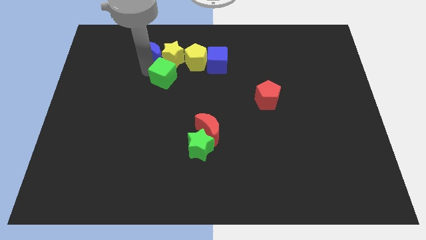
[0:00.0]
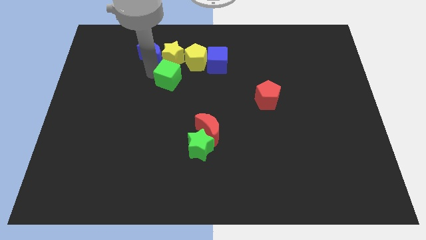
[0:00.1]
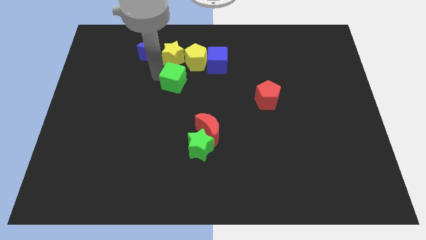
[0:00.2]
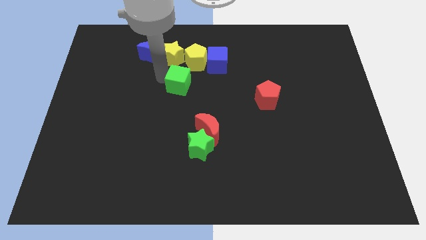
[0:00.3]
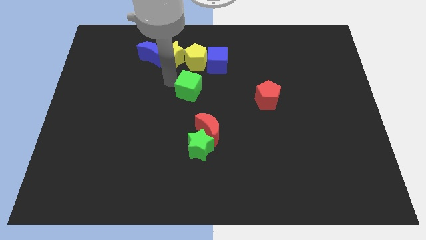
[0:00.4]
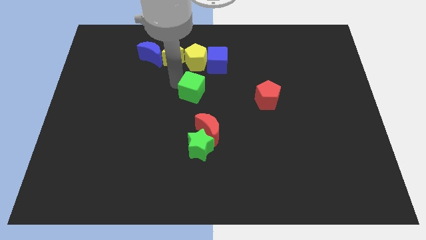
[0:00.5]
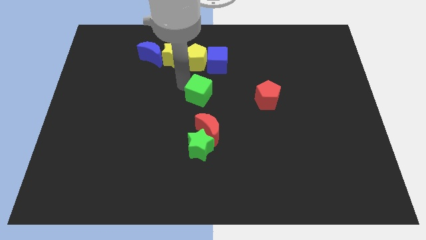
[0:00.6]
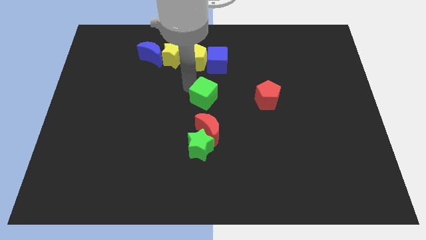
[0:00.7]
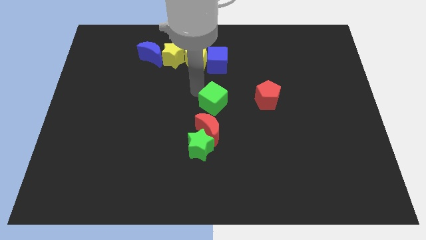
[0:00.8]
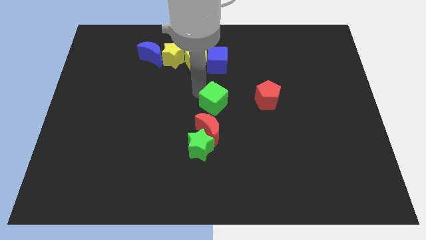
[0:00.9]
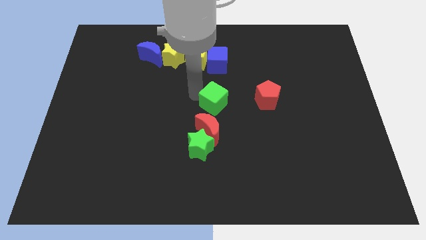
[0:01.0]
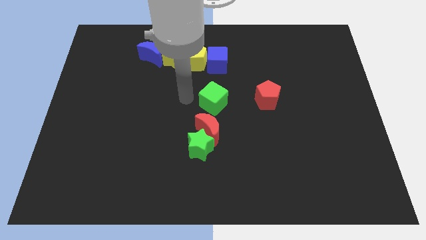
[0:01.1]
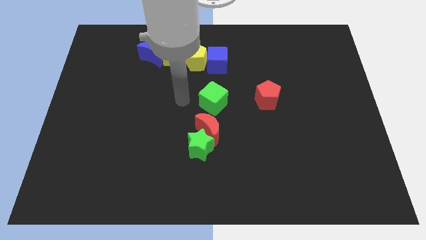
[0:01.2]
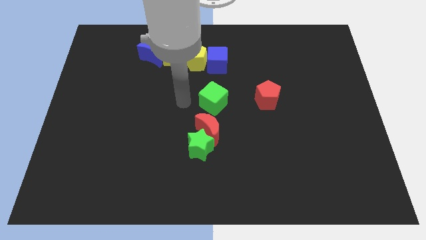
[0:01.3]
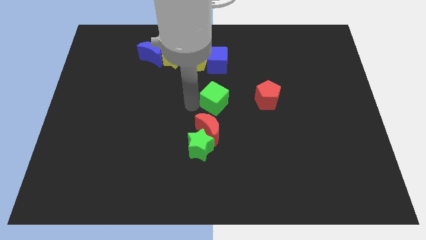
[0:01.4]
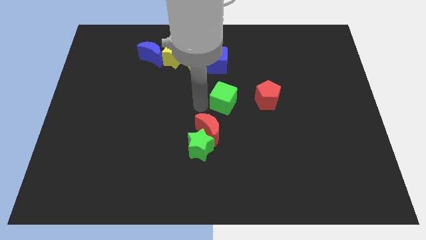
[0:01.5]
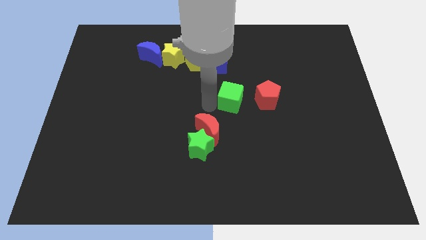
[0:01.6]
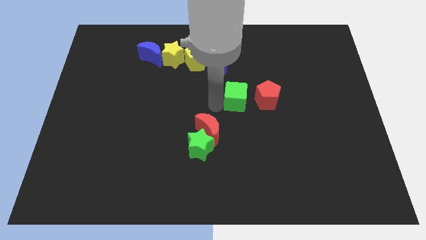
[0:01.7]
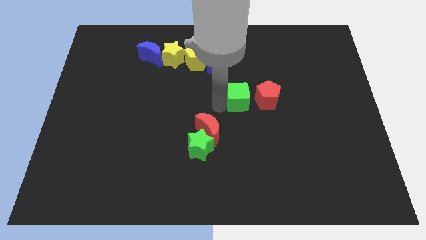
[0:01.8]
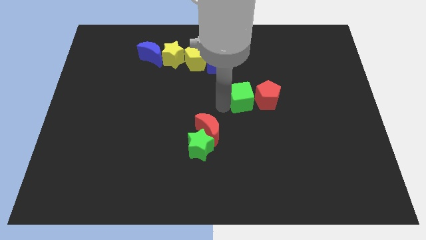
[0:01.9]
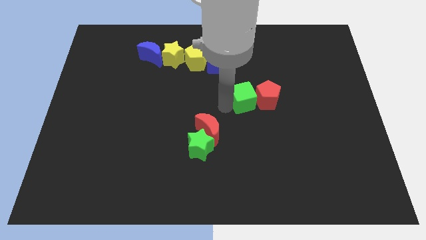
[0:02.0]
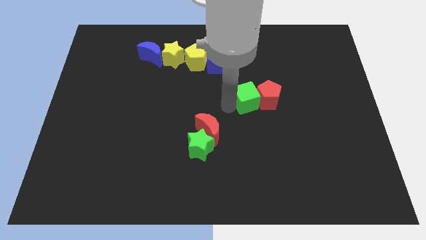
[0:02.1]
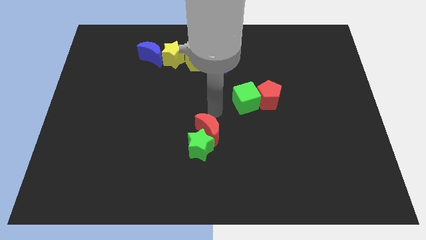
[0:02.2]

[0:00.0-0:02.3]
push the green cube to the left side of the red pentagon

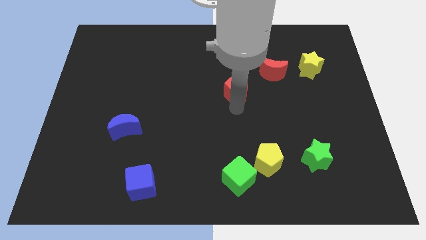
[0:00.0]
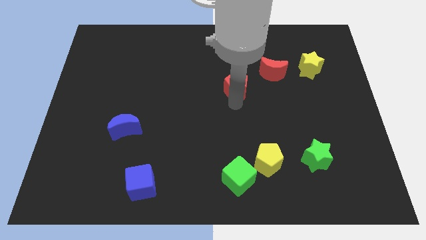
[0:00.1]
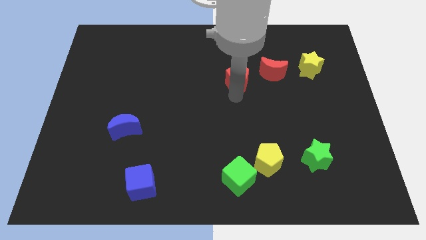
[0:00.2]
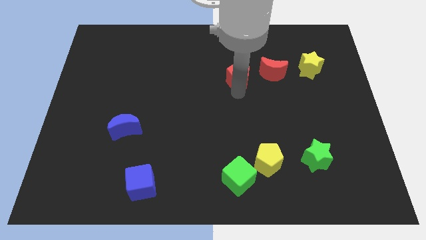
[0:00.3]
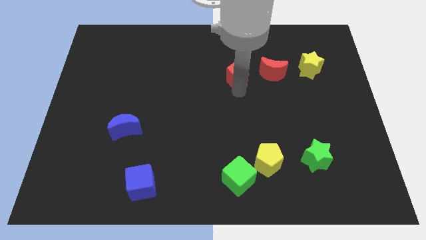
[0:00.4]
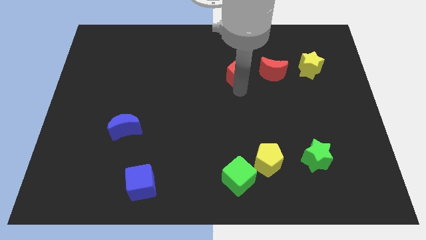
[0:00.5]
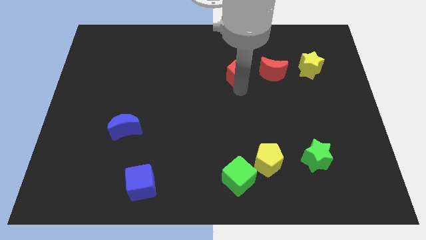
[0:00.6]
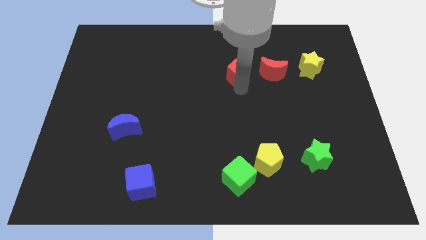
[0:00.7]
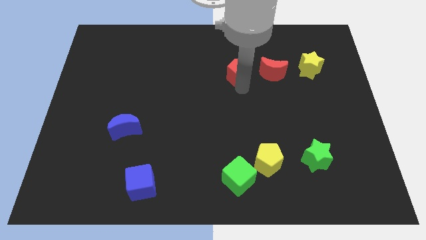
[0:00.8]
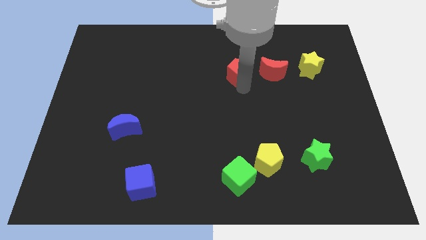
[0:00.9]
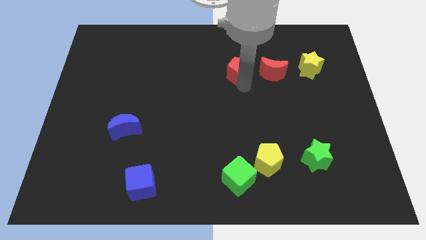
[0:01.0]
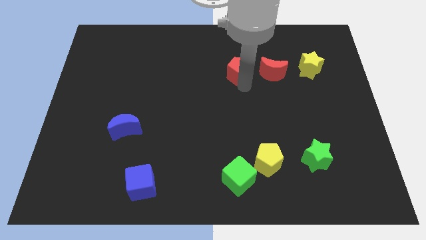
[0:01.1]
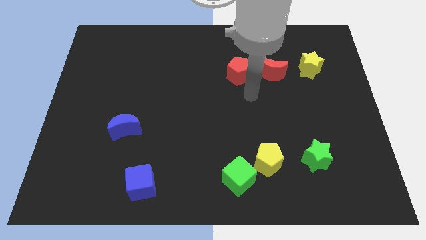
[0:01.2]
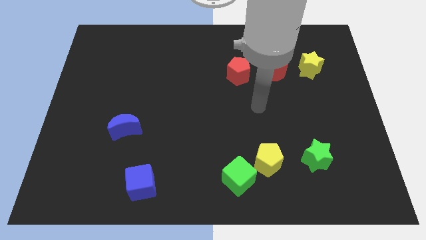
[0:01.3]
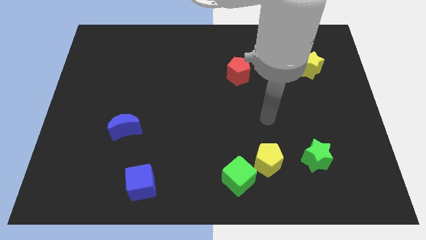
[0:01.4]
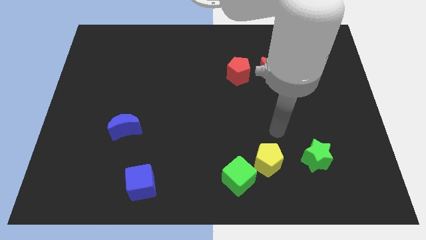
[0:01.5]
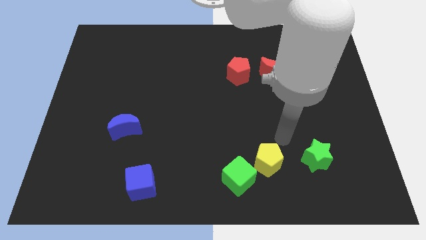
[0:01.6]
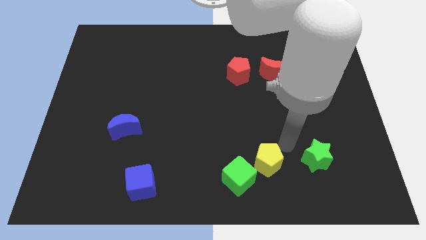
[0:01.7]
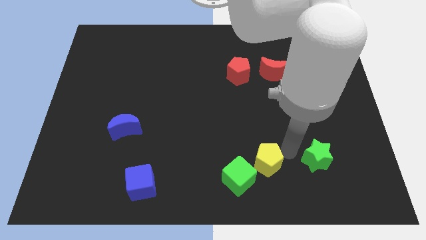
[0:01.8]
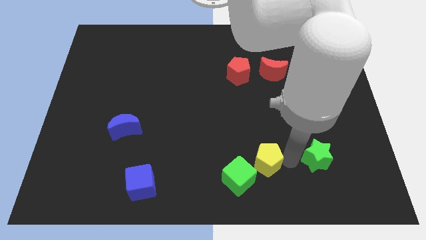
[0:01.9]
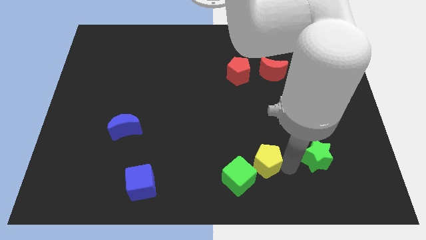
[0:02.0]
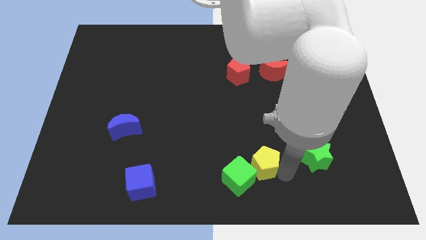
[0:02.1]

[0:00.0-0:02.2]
place the red pentagon left side of the red moon

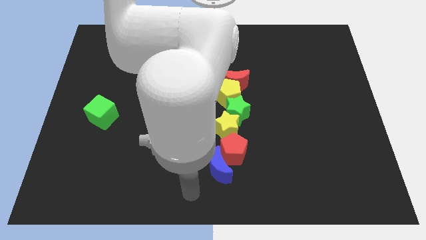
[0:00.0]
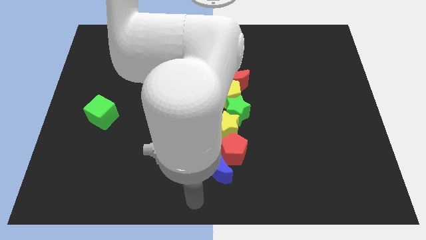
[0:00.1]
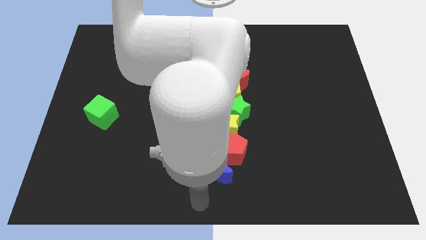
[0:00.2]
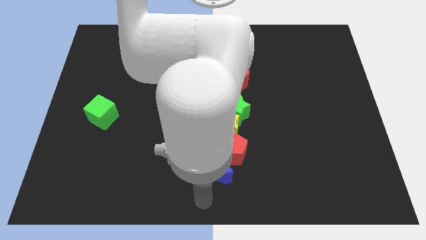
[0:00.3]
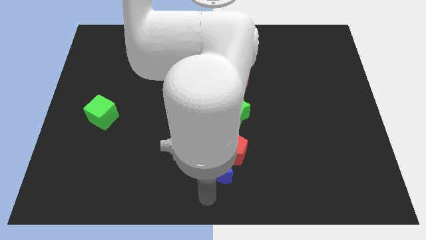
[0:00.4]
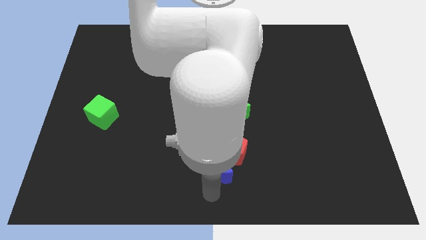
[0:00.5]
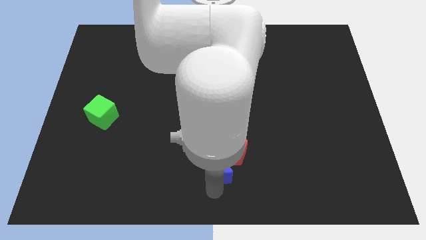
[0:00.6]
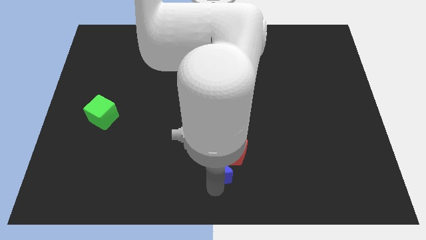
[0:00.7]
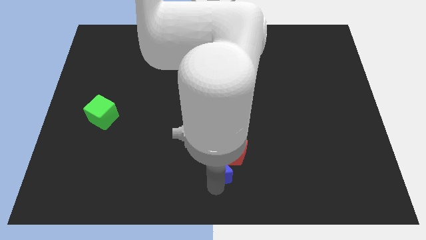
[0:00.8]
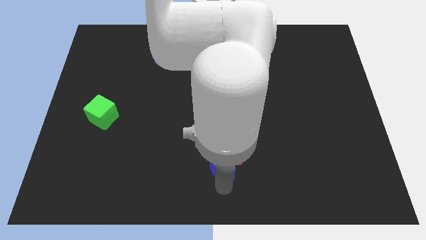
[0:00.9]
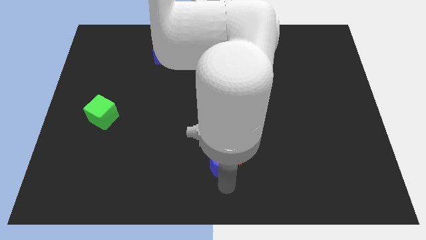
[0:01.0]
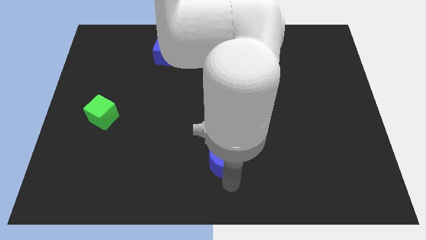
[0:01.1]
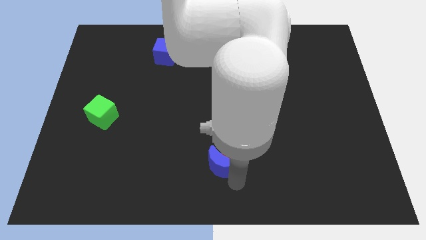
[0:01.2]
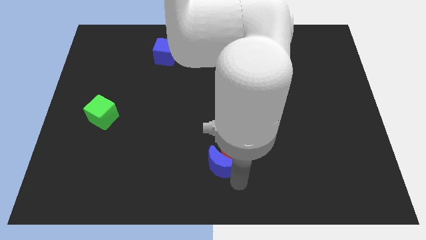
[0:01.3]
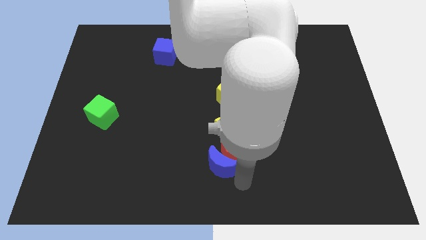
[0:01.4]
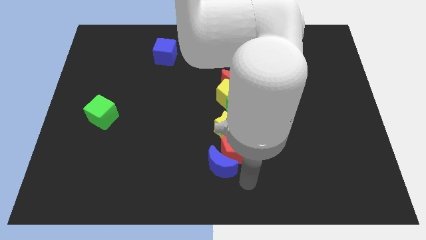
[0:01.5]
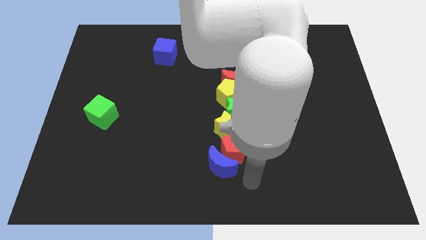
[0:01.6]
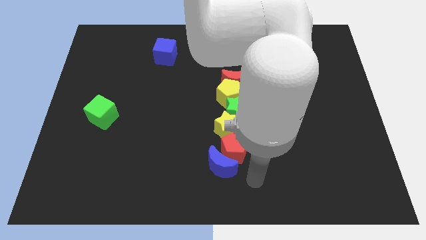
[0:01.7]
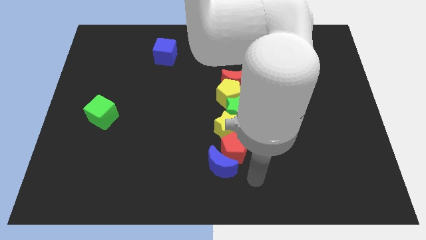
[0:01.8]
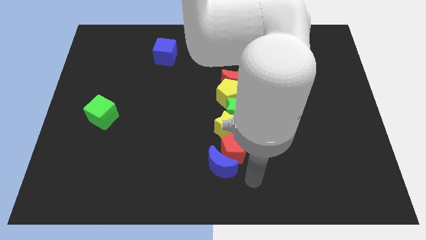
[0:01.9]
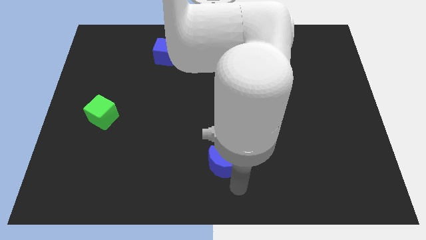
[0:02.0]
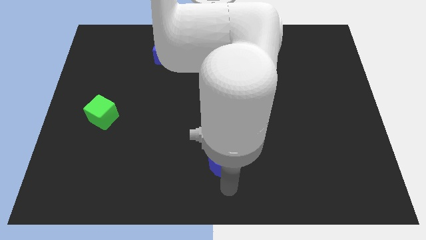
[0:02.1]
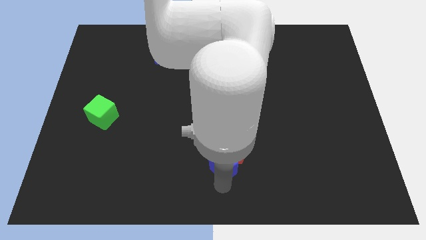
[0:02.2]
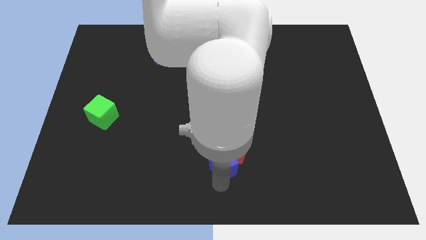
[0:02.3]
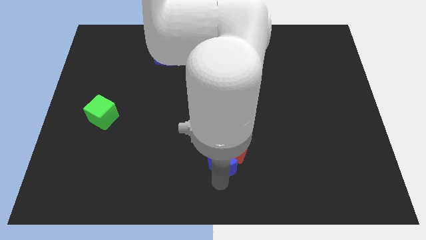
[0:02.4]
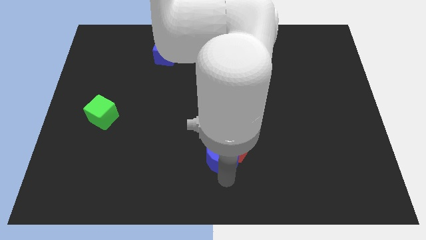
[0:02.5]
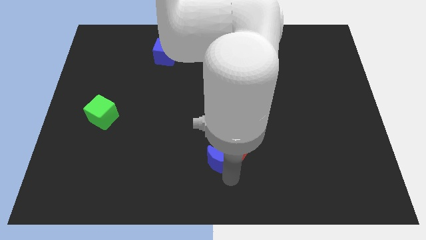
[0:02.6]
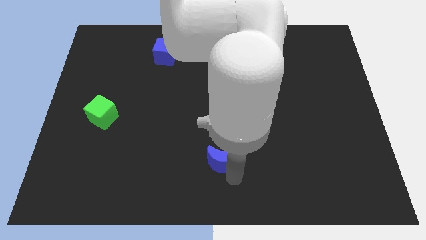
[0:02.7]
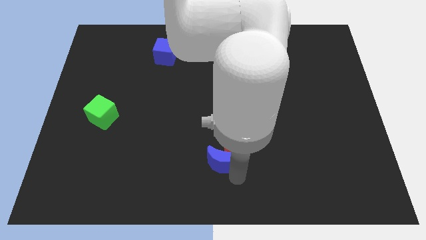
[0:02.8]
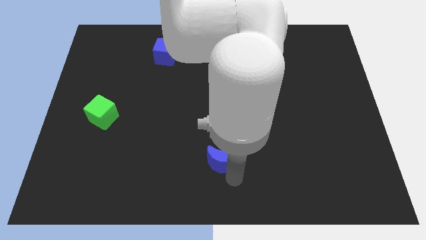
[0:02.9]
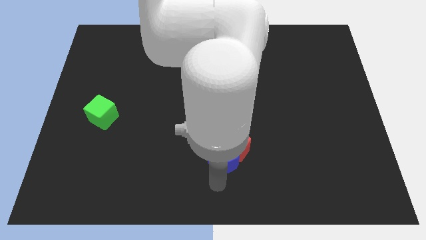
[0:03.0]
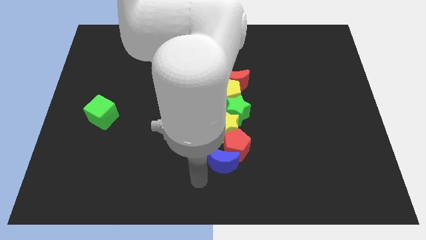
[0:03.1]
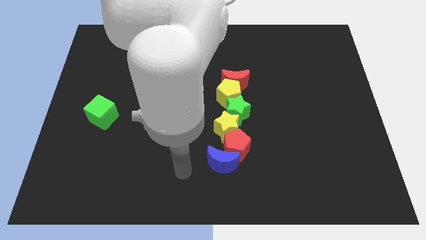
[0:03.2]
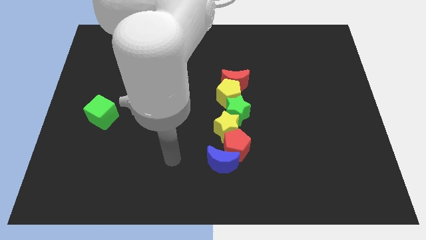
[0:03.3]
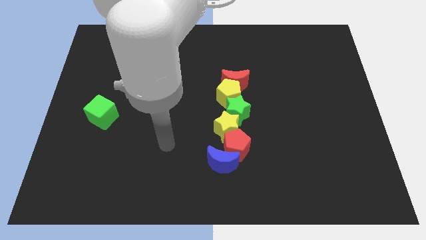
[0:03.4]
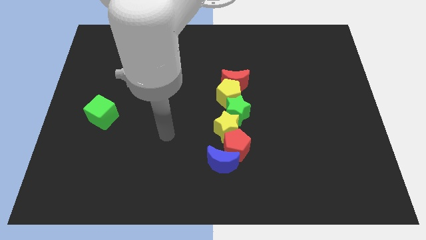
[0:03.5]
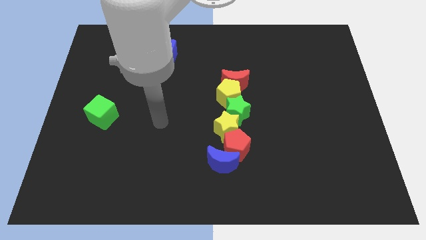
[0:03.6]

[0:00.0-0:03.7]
move yourself away from the blue moon

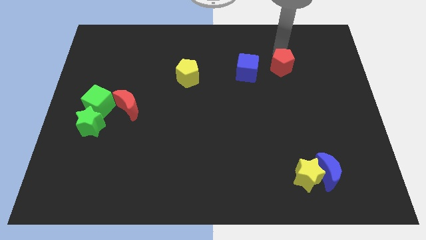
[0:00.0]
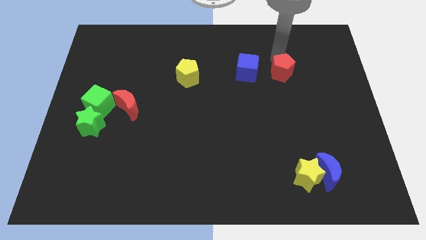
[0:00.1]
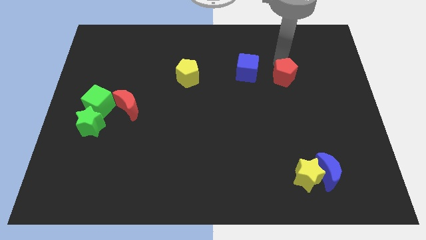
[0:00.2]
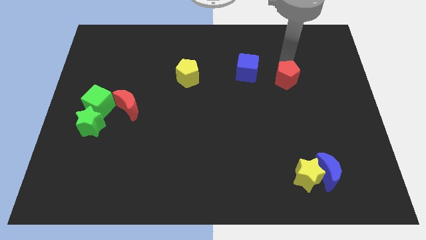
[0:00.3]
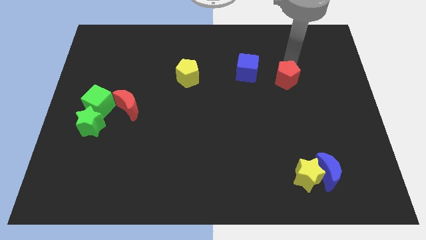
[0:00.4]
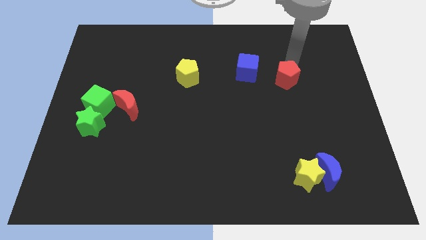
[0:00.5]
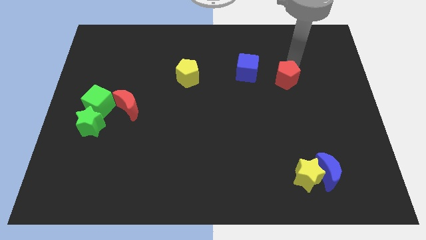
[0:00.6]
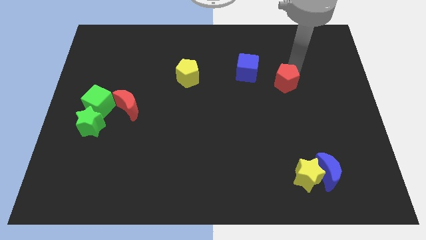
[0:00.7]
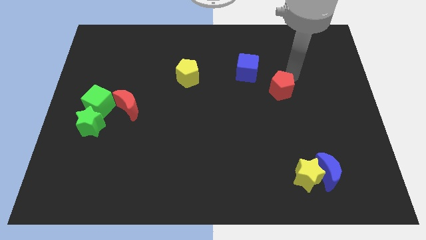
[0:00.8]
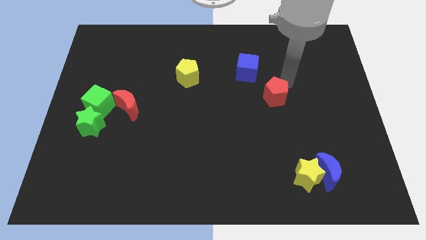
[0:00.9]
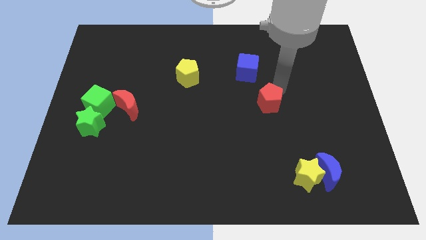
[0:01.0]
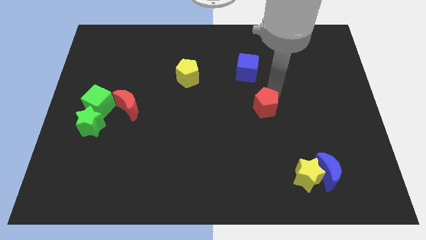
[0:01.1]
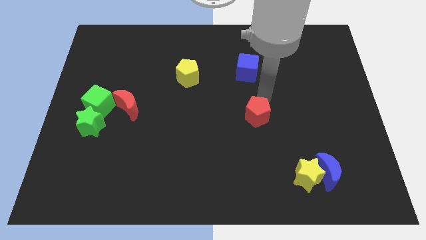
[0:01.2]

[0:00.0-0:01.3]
place the red pentagon in between the blue cube and yellow star
